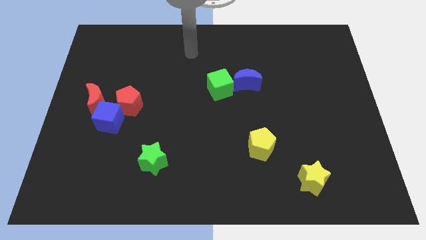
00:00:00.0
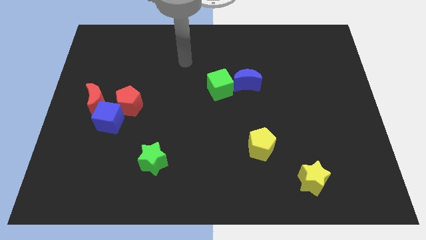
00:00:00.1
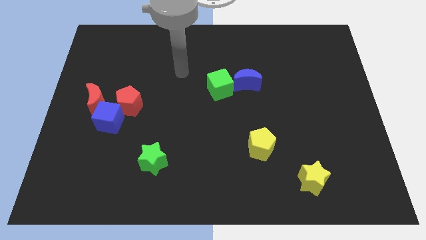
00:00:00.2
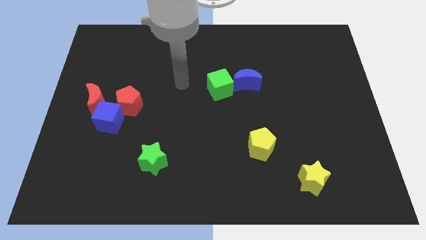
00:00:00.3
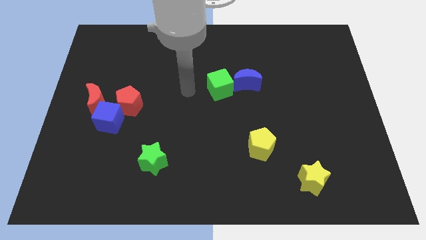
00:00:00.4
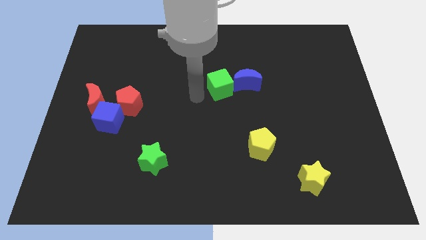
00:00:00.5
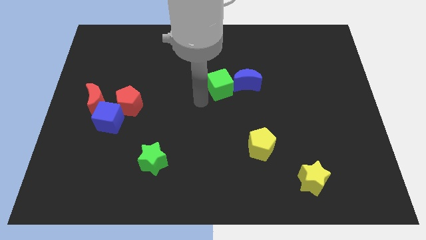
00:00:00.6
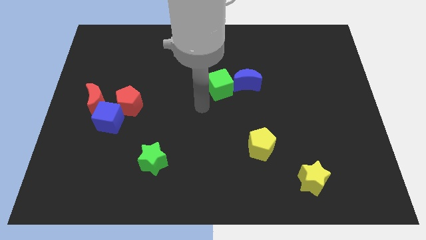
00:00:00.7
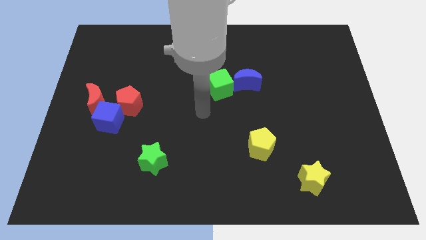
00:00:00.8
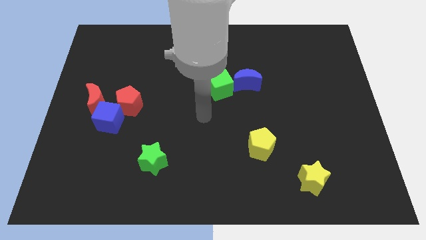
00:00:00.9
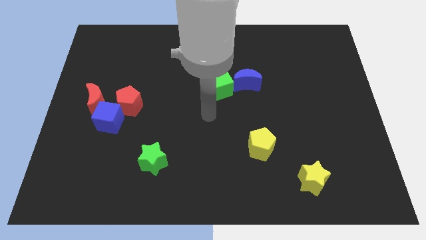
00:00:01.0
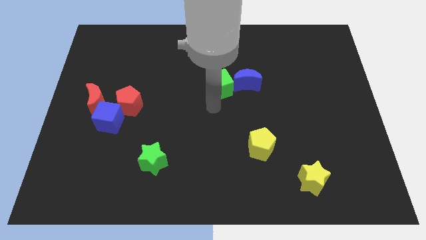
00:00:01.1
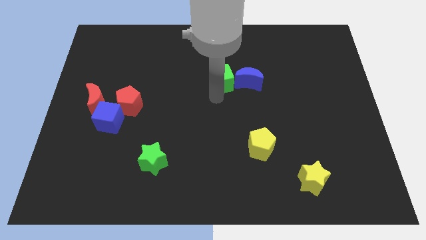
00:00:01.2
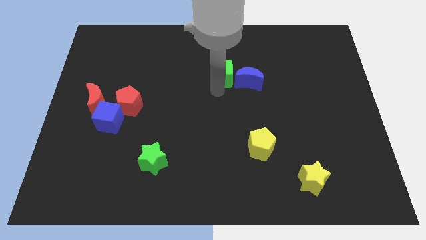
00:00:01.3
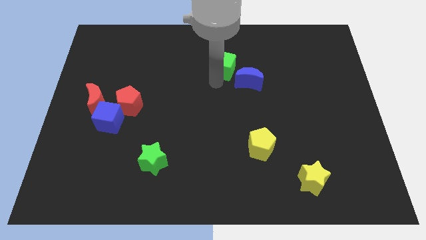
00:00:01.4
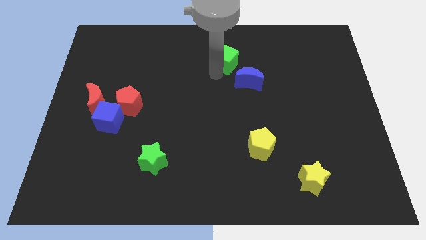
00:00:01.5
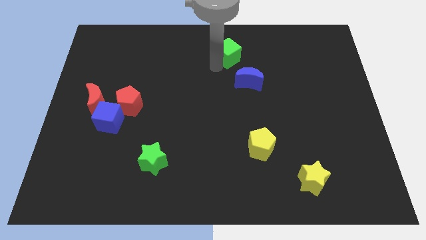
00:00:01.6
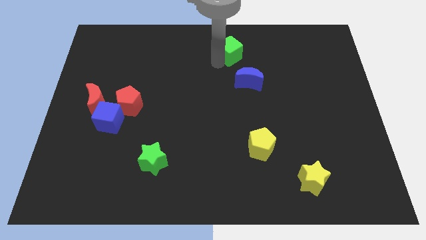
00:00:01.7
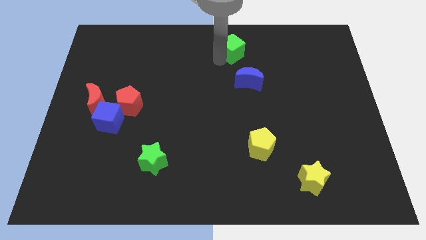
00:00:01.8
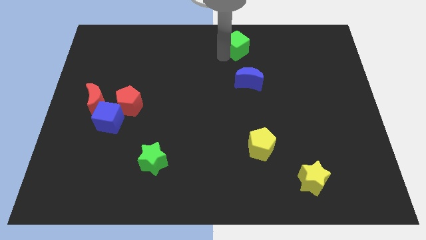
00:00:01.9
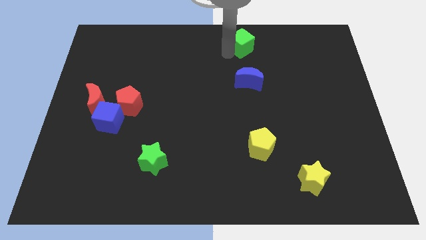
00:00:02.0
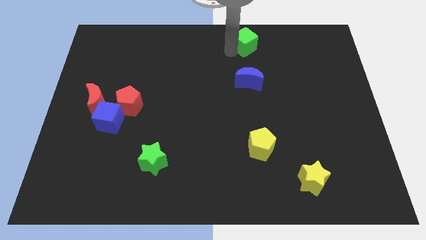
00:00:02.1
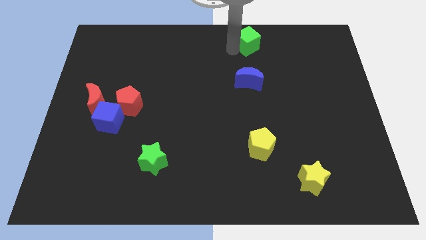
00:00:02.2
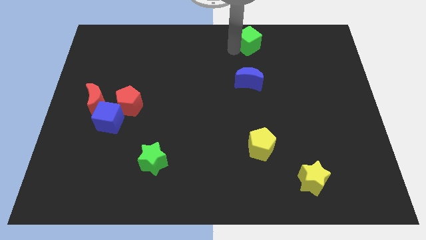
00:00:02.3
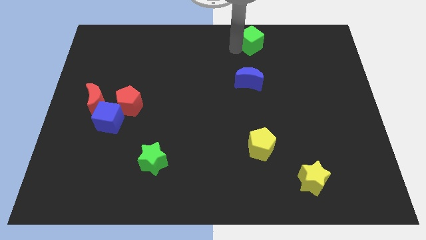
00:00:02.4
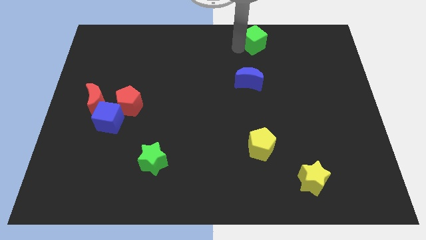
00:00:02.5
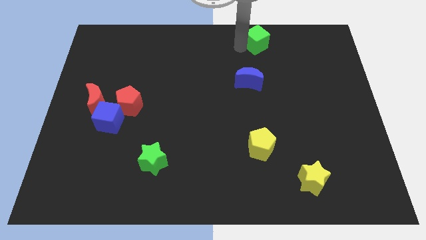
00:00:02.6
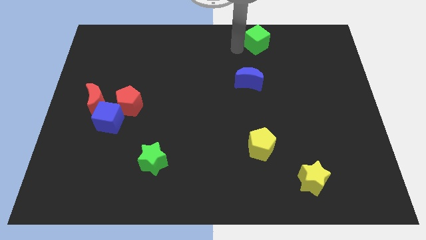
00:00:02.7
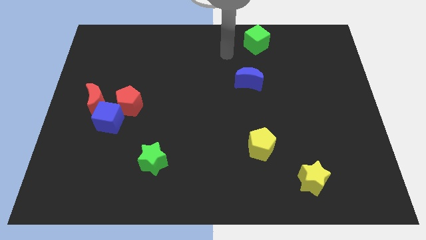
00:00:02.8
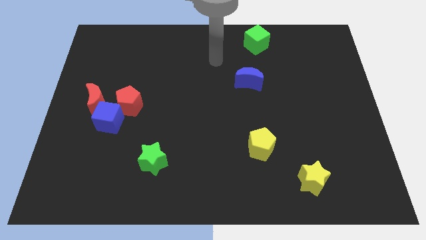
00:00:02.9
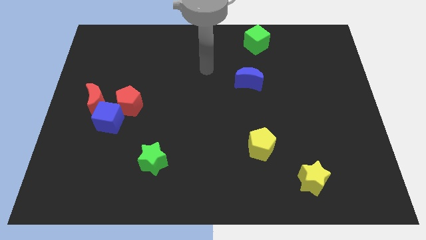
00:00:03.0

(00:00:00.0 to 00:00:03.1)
push the green cube at the top side of the board

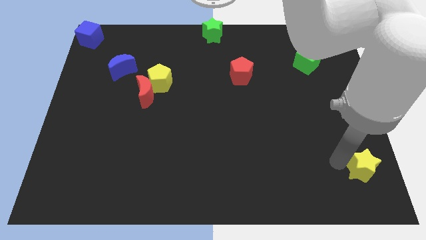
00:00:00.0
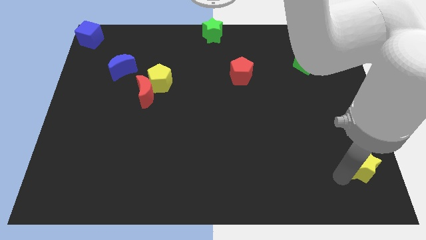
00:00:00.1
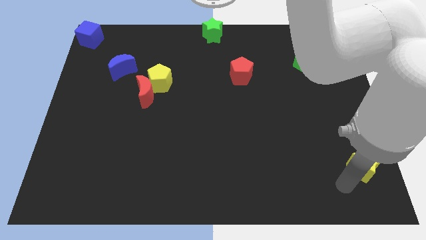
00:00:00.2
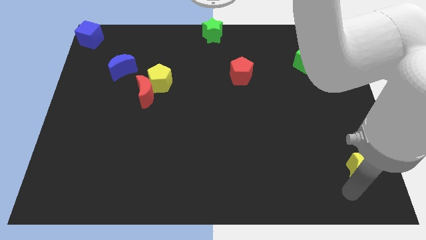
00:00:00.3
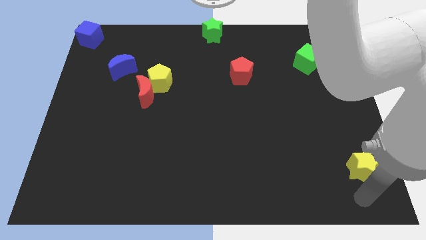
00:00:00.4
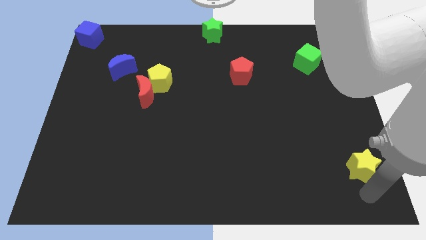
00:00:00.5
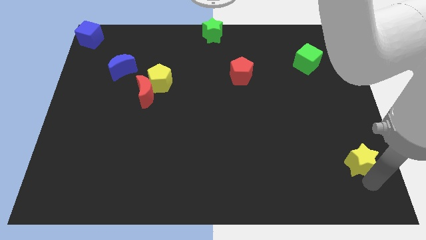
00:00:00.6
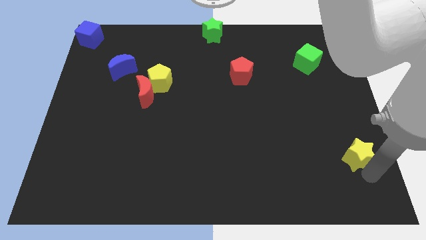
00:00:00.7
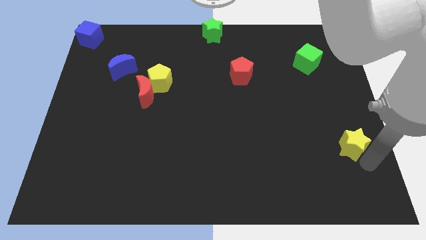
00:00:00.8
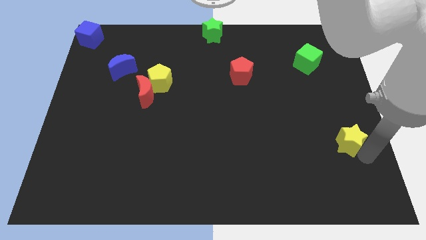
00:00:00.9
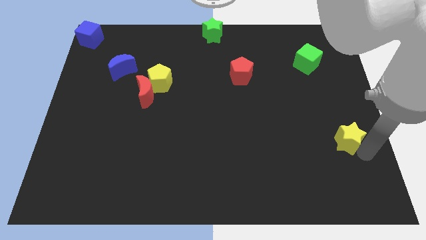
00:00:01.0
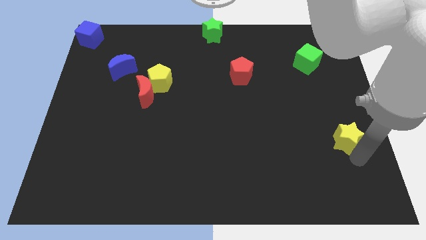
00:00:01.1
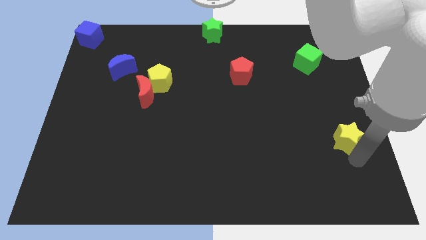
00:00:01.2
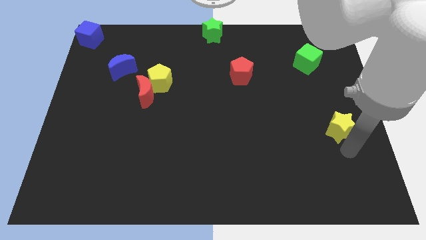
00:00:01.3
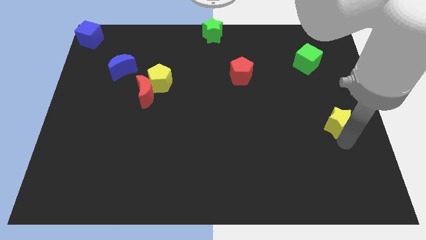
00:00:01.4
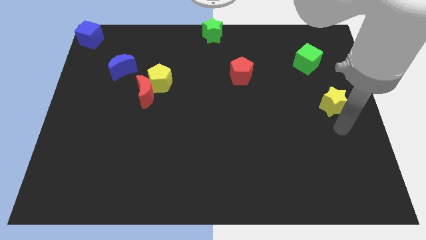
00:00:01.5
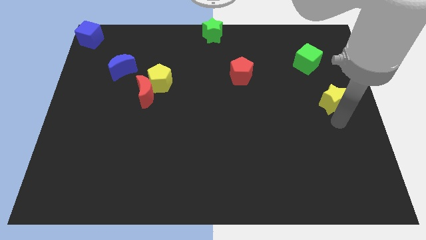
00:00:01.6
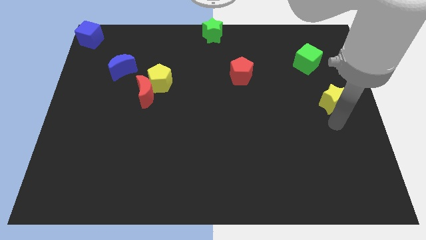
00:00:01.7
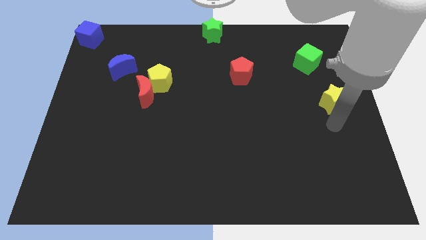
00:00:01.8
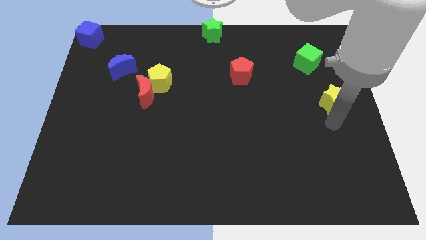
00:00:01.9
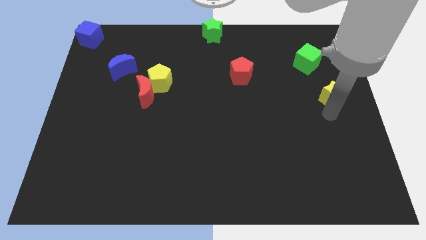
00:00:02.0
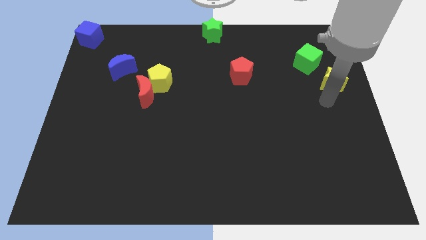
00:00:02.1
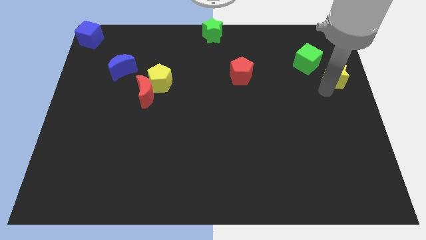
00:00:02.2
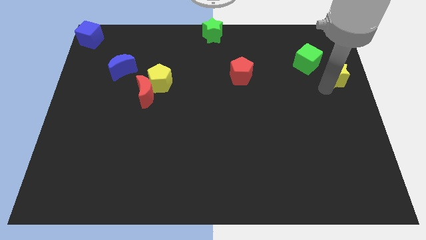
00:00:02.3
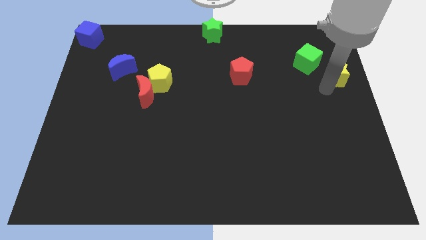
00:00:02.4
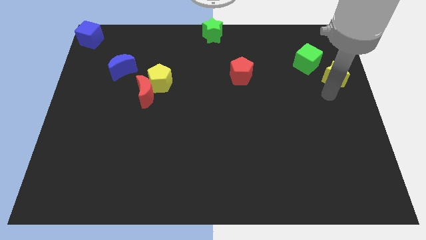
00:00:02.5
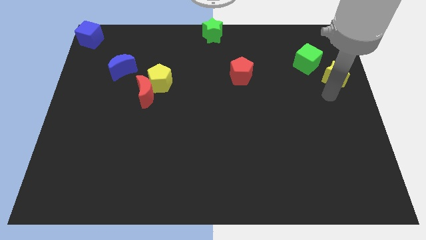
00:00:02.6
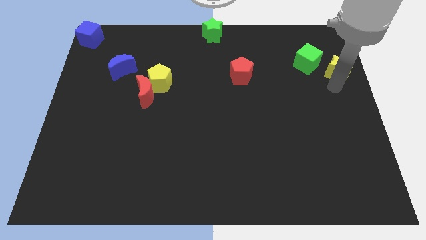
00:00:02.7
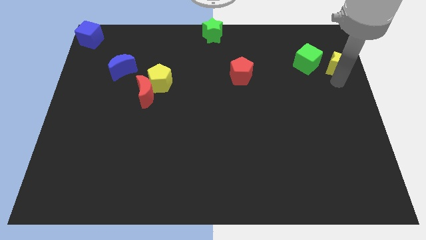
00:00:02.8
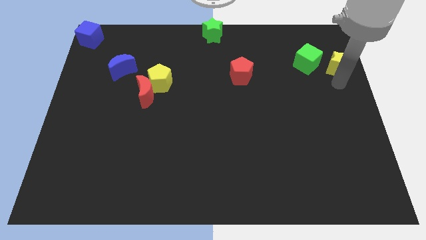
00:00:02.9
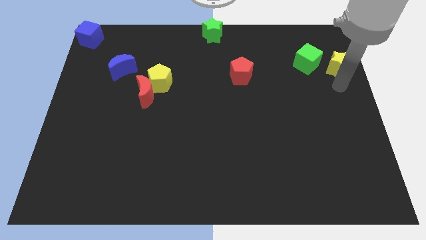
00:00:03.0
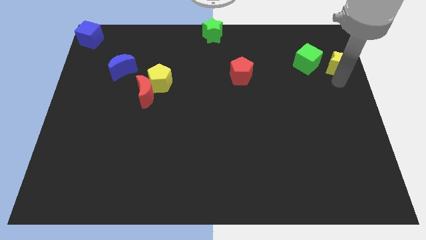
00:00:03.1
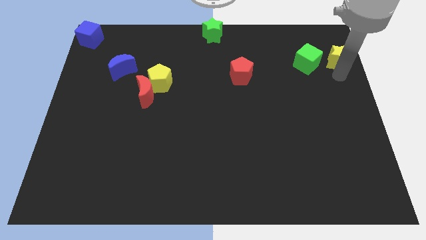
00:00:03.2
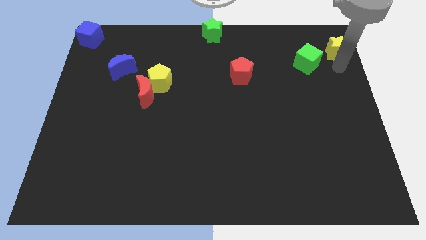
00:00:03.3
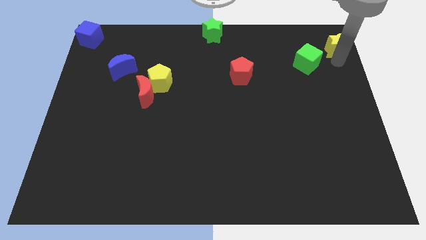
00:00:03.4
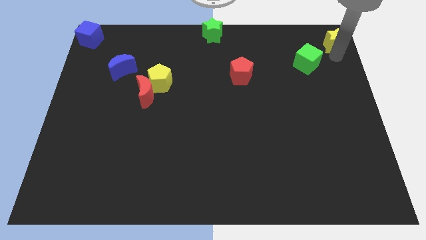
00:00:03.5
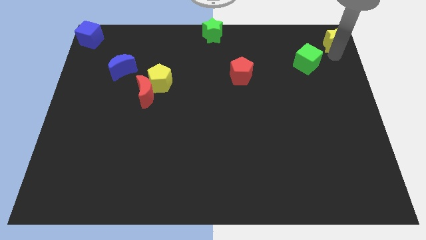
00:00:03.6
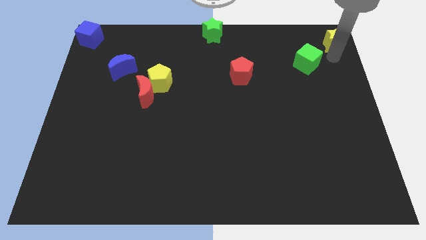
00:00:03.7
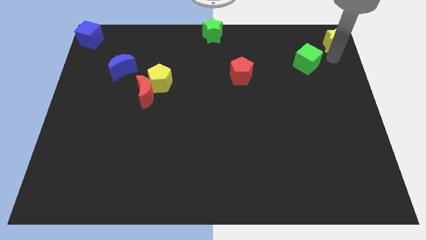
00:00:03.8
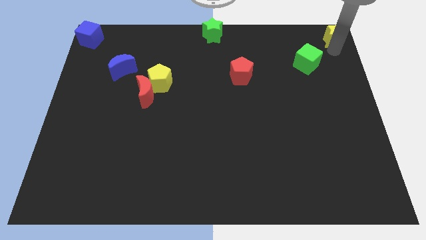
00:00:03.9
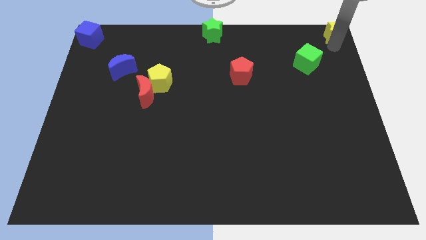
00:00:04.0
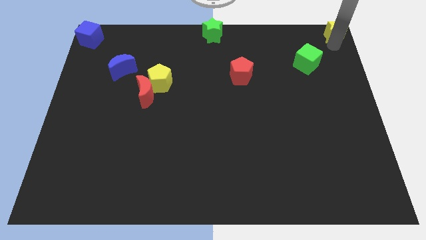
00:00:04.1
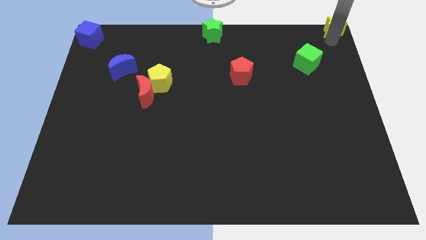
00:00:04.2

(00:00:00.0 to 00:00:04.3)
push the yellow star to the top right to the board

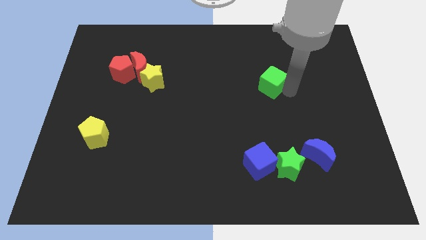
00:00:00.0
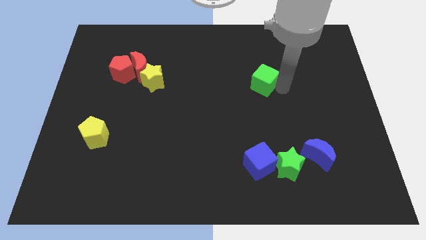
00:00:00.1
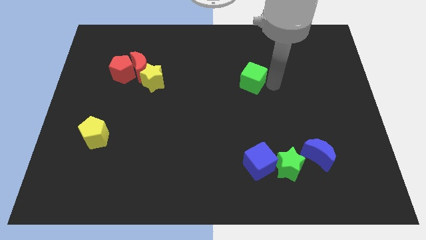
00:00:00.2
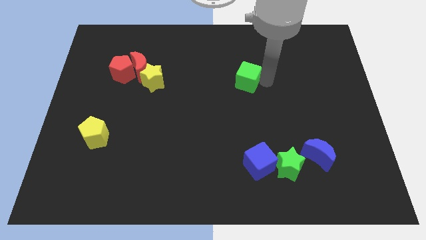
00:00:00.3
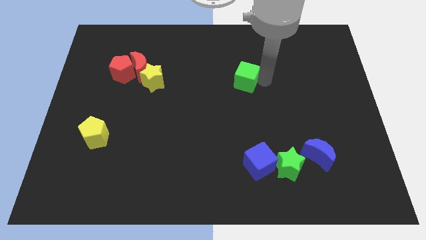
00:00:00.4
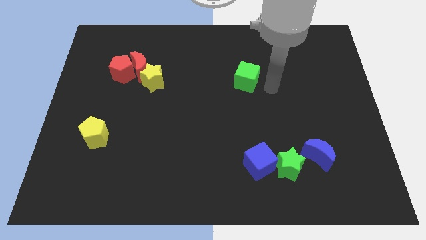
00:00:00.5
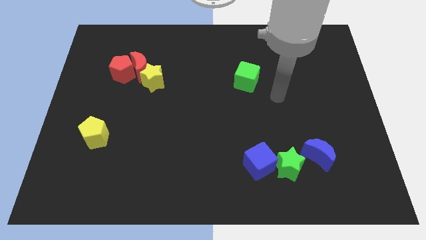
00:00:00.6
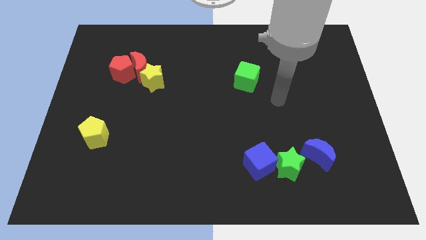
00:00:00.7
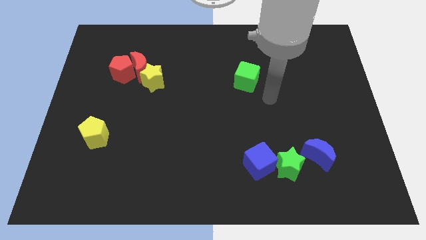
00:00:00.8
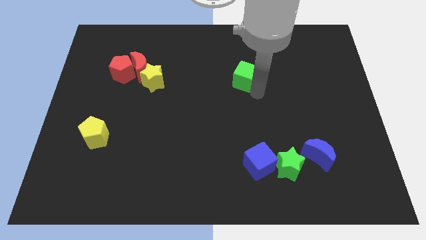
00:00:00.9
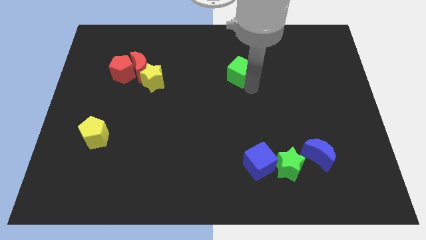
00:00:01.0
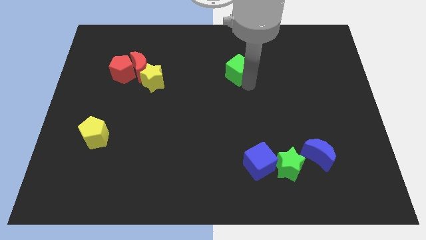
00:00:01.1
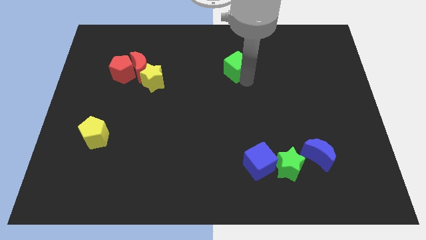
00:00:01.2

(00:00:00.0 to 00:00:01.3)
place the green cube to the right of the yellow star

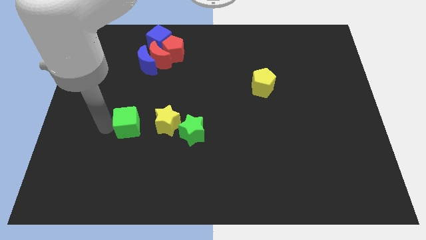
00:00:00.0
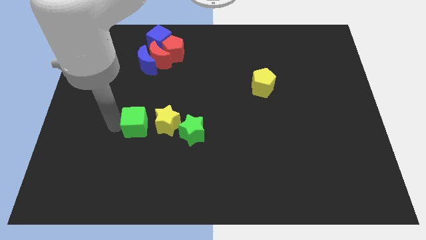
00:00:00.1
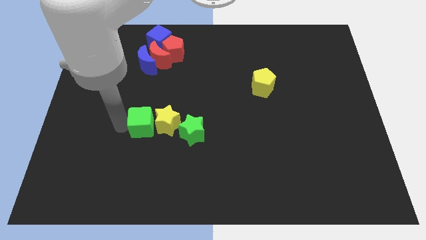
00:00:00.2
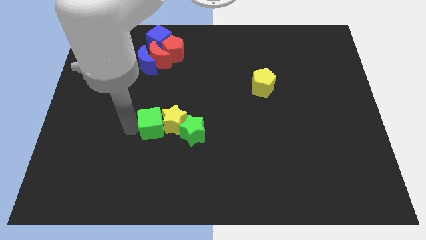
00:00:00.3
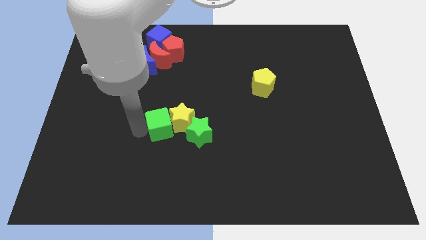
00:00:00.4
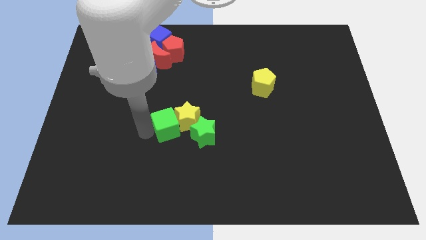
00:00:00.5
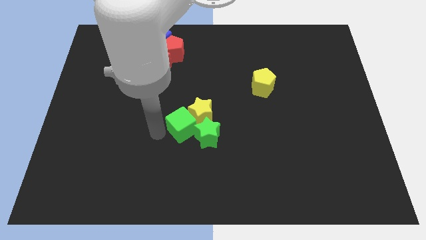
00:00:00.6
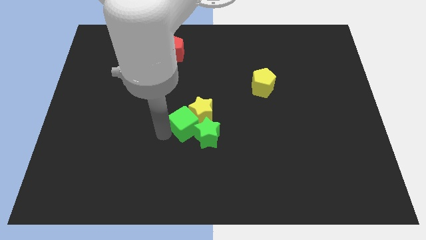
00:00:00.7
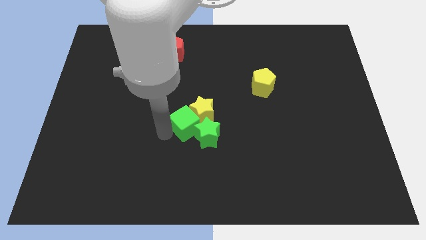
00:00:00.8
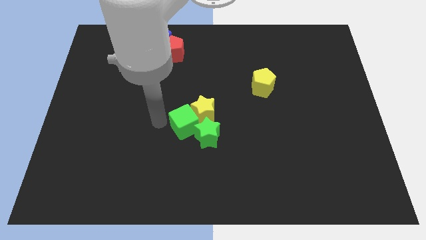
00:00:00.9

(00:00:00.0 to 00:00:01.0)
push the green cube into the green star
